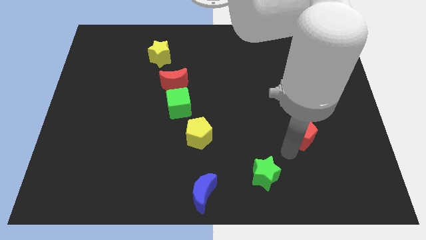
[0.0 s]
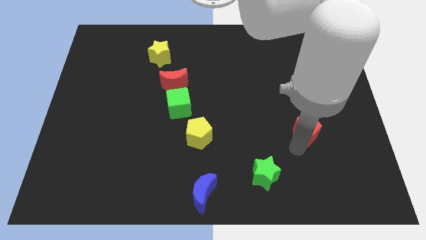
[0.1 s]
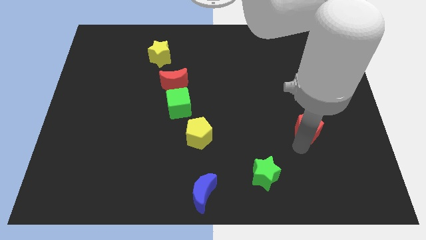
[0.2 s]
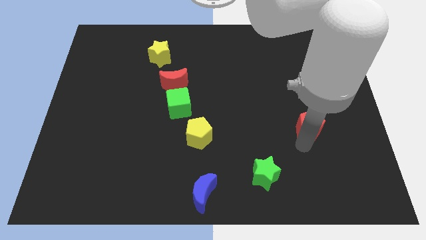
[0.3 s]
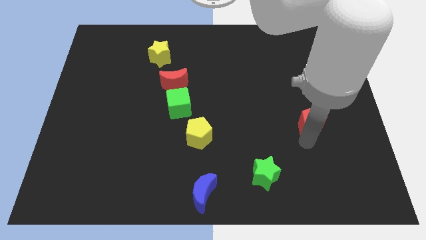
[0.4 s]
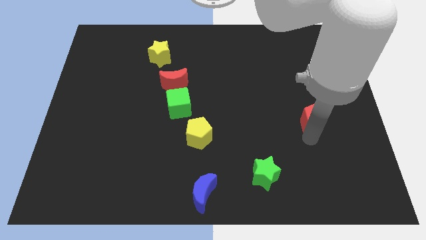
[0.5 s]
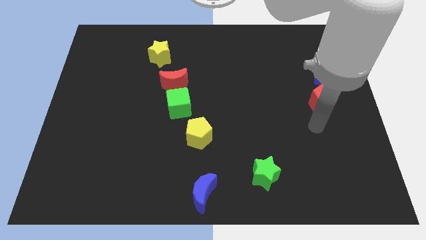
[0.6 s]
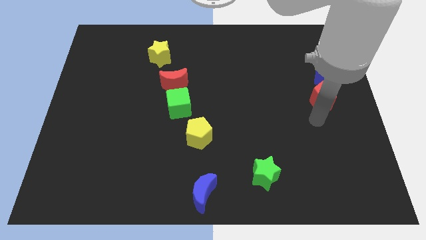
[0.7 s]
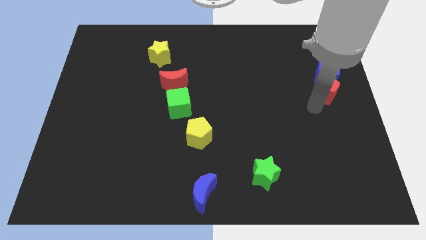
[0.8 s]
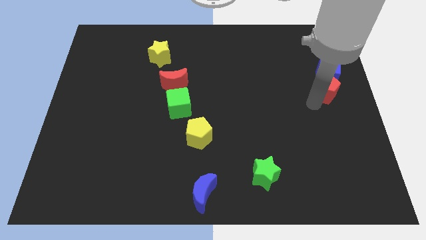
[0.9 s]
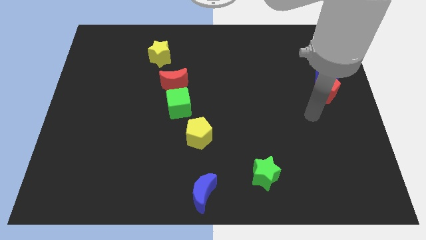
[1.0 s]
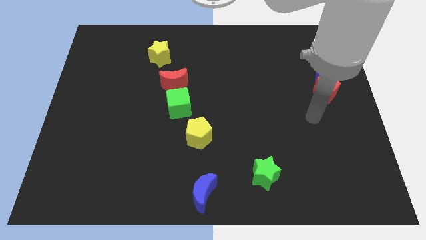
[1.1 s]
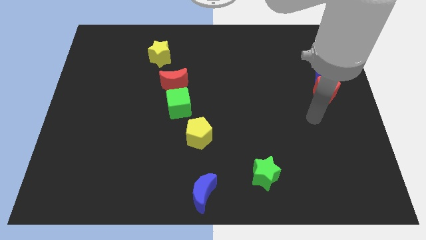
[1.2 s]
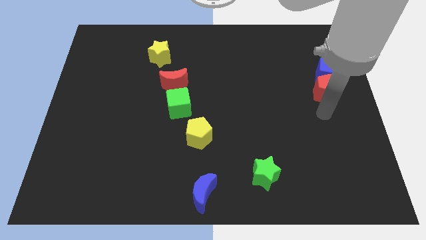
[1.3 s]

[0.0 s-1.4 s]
move the red pentagon into the bottom side of the blue cube

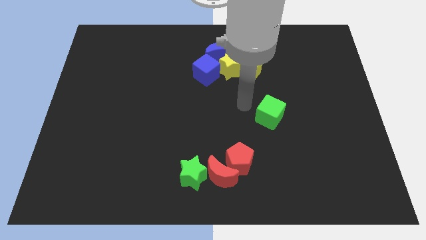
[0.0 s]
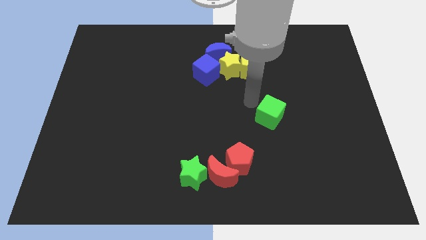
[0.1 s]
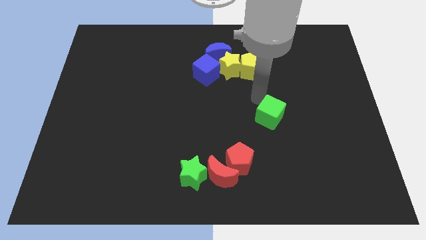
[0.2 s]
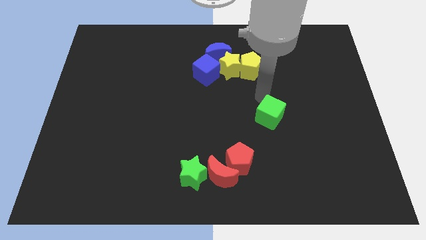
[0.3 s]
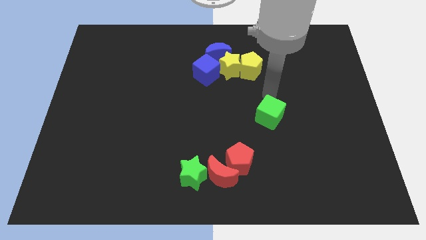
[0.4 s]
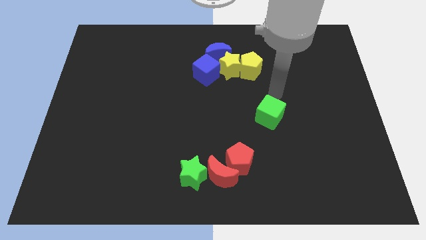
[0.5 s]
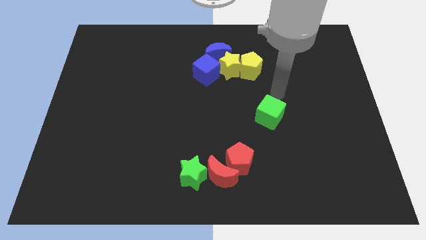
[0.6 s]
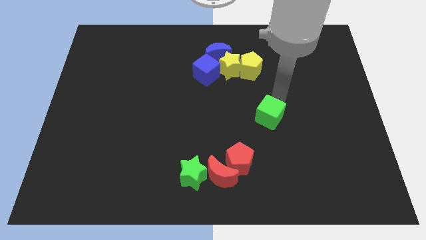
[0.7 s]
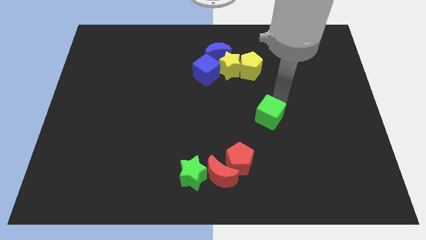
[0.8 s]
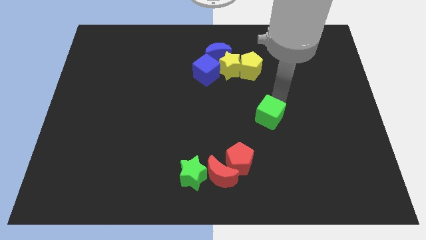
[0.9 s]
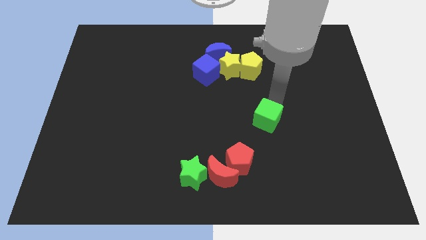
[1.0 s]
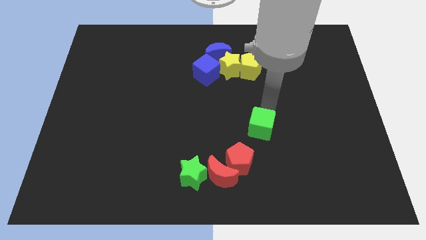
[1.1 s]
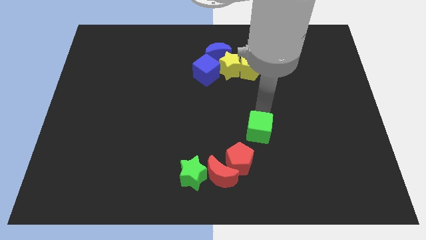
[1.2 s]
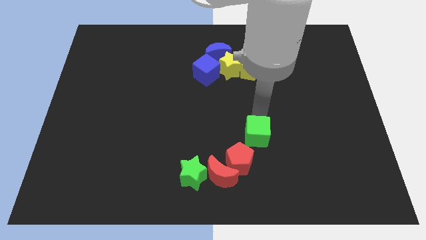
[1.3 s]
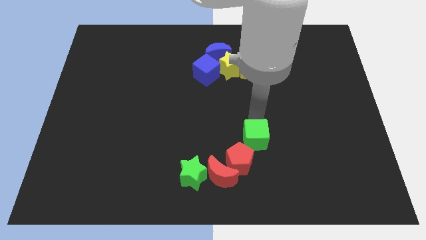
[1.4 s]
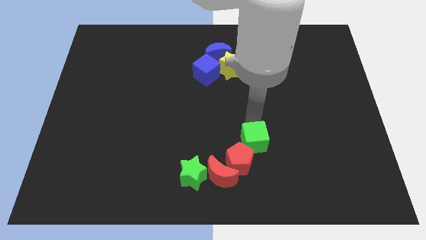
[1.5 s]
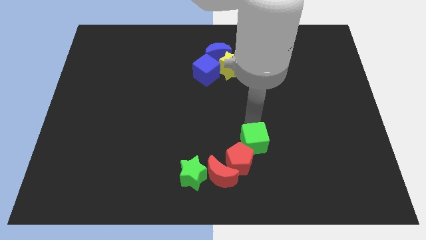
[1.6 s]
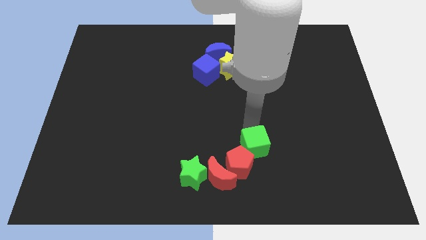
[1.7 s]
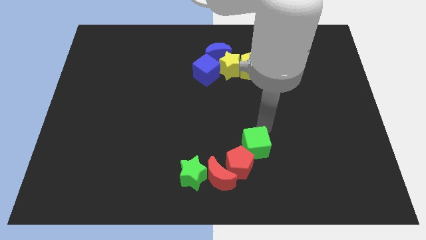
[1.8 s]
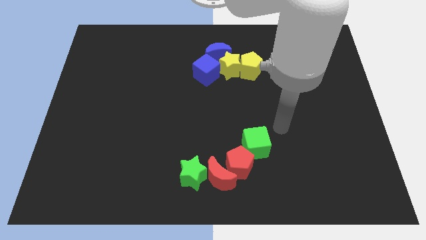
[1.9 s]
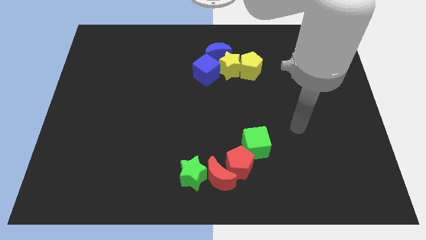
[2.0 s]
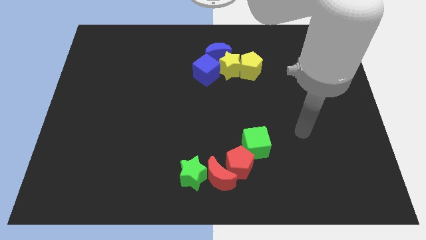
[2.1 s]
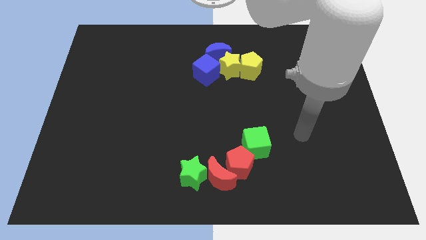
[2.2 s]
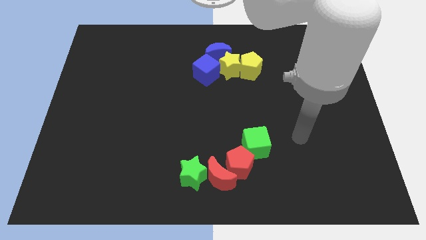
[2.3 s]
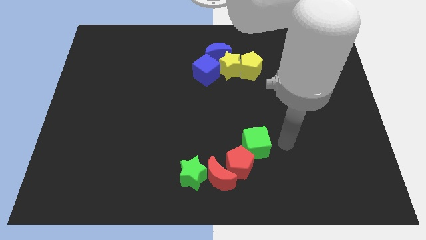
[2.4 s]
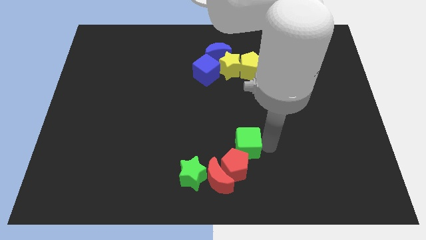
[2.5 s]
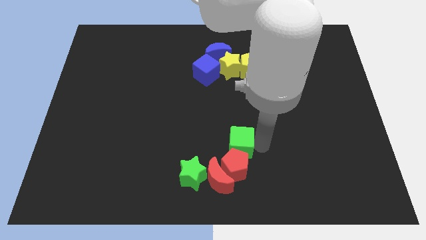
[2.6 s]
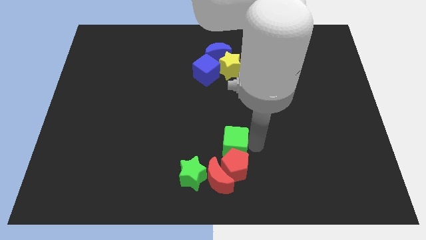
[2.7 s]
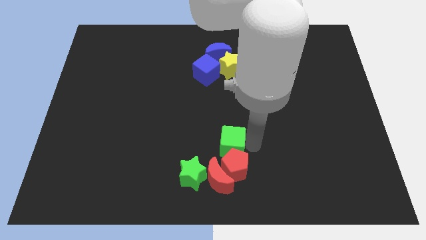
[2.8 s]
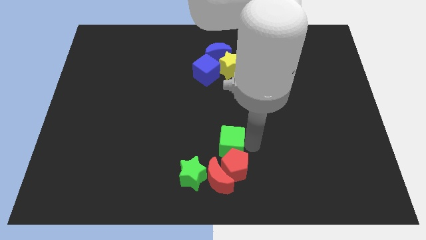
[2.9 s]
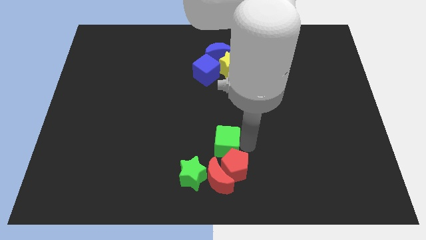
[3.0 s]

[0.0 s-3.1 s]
move the green cube above the red pentagon

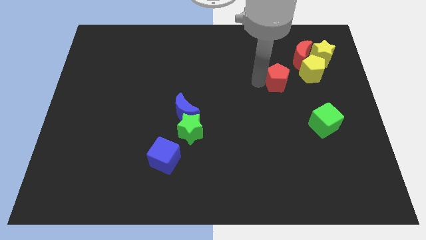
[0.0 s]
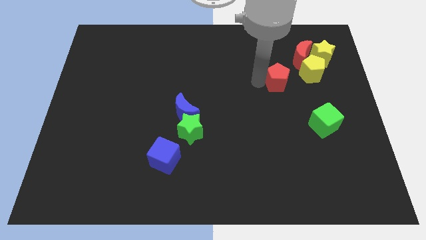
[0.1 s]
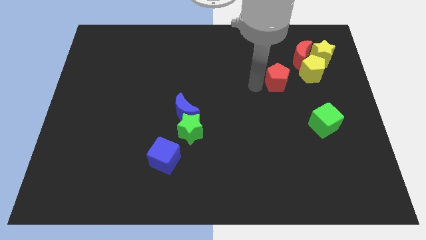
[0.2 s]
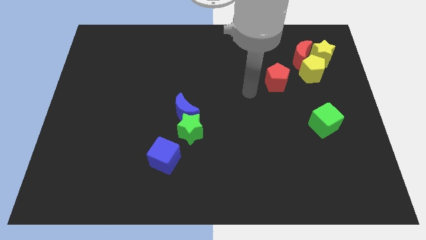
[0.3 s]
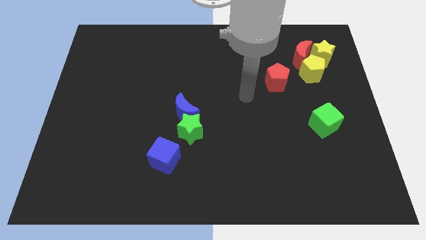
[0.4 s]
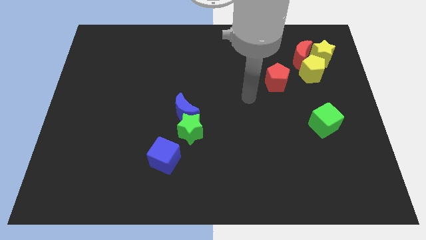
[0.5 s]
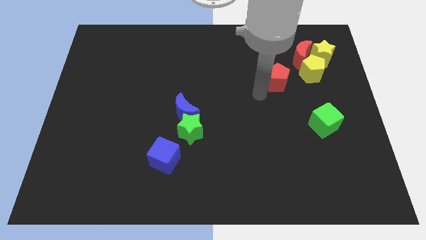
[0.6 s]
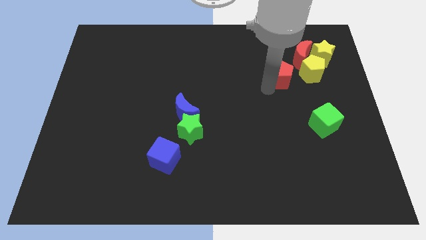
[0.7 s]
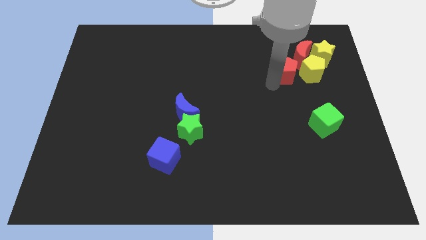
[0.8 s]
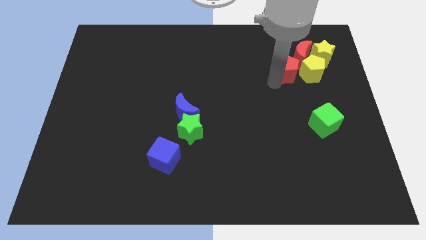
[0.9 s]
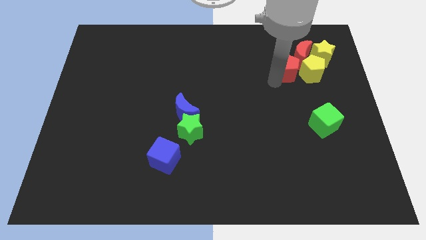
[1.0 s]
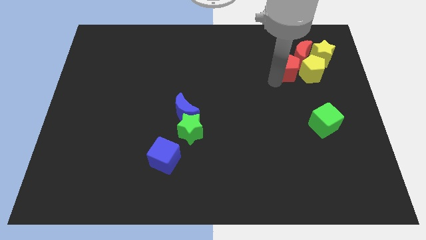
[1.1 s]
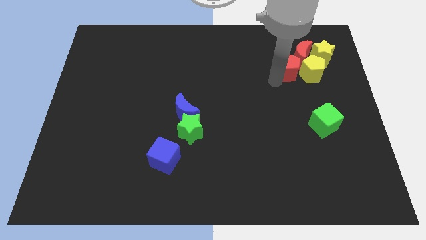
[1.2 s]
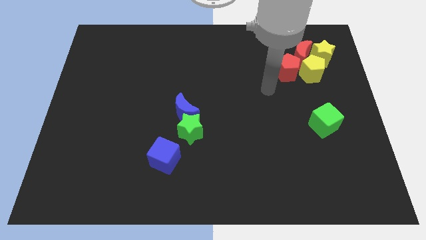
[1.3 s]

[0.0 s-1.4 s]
move the red pentagon to the left of the yellow pentagon

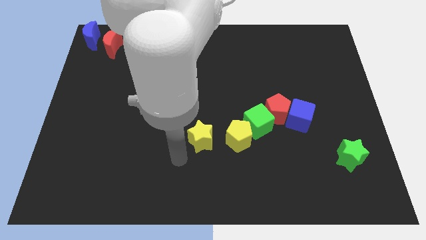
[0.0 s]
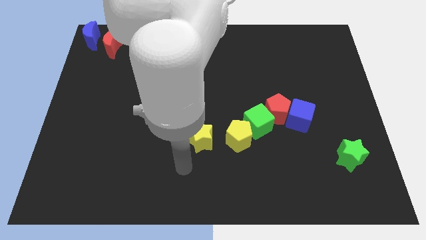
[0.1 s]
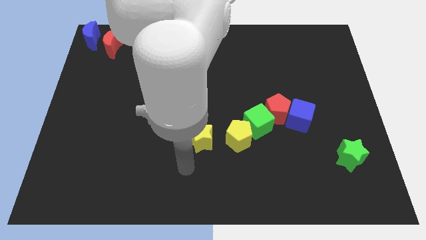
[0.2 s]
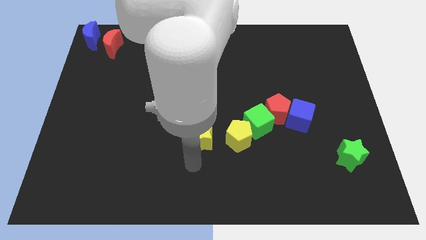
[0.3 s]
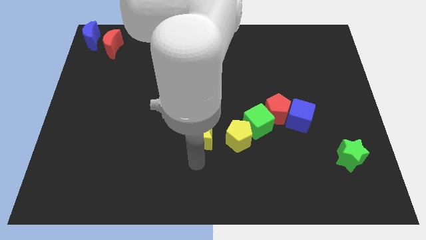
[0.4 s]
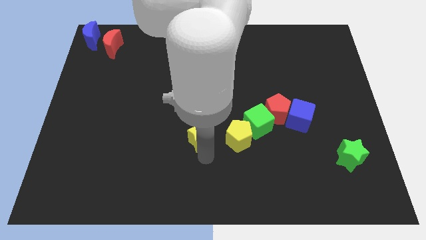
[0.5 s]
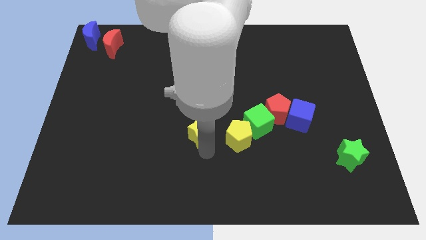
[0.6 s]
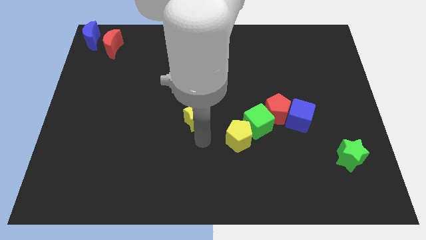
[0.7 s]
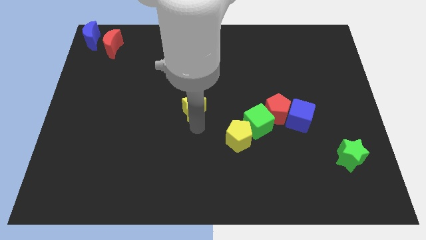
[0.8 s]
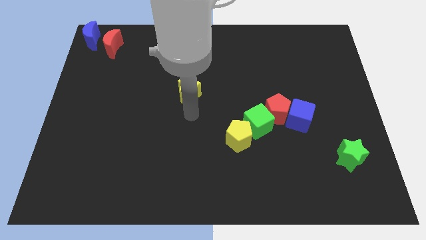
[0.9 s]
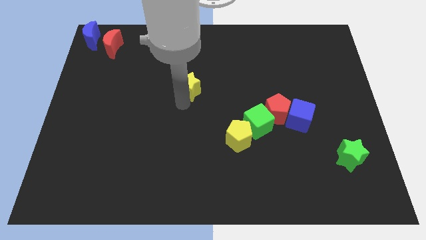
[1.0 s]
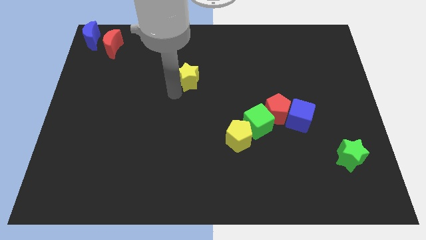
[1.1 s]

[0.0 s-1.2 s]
put the yellow star diagonally at the top left of the yellow pentagon

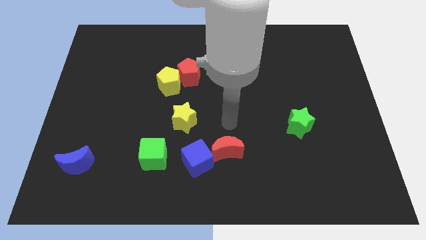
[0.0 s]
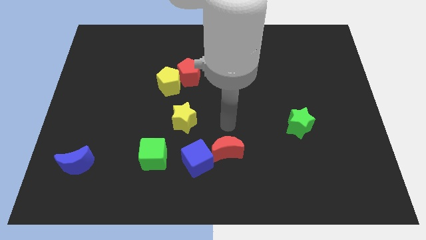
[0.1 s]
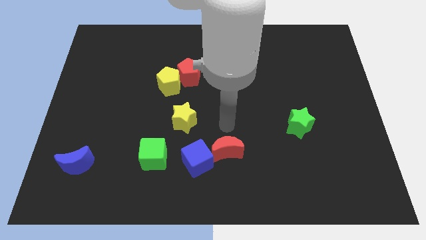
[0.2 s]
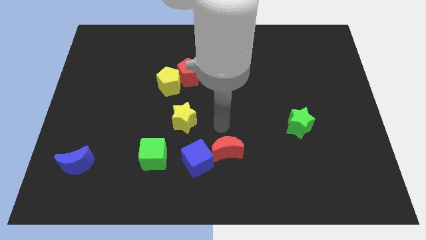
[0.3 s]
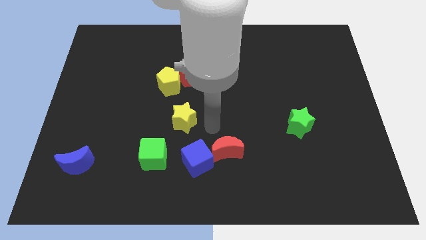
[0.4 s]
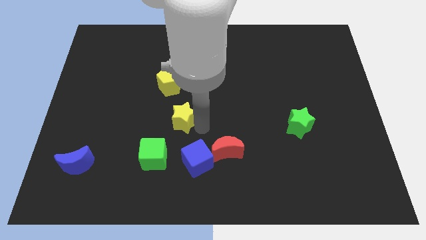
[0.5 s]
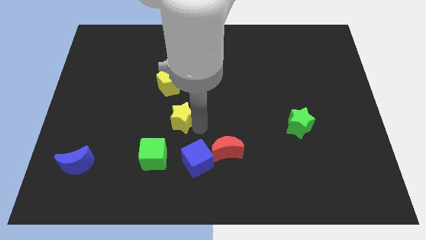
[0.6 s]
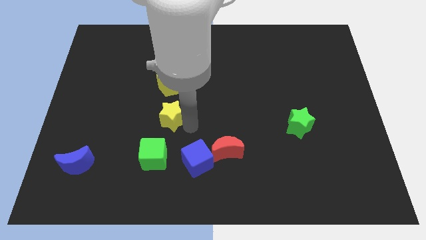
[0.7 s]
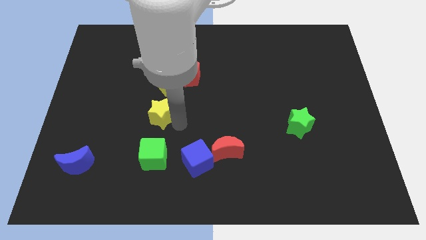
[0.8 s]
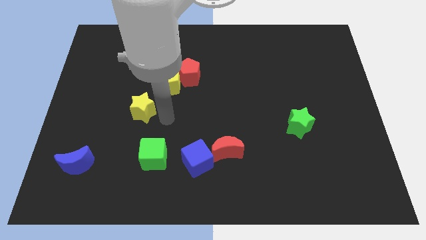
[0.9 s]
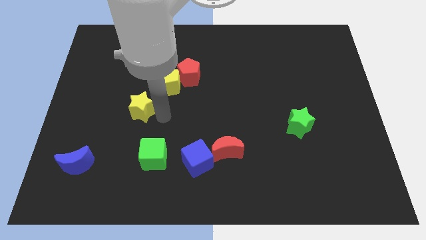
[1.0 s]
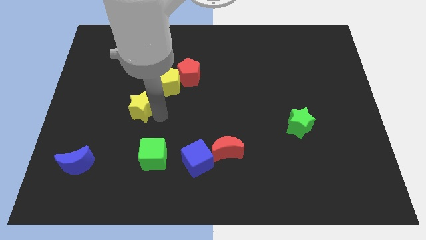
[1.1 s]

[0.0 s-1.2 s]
move the yellow star vertical to the yellow pentagon

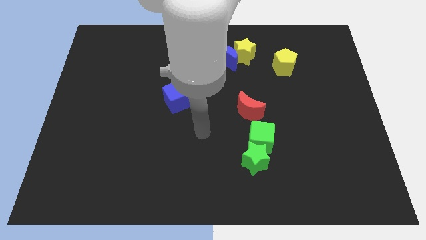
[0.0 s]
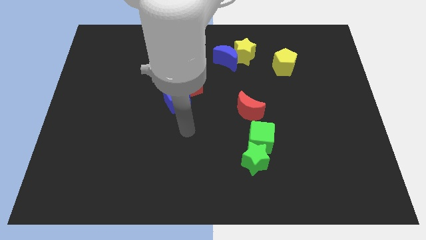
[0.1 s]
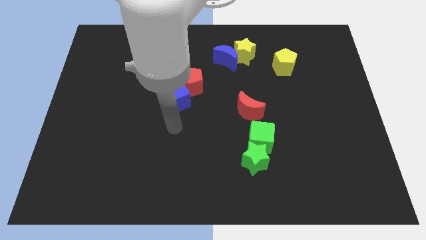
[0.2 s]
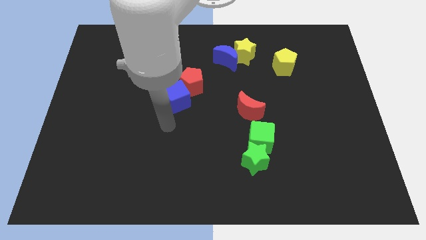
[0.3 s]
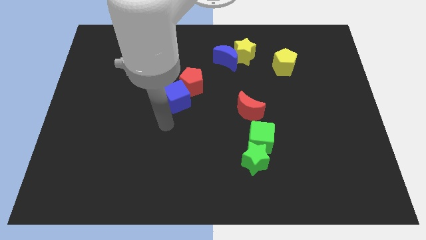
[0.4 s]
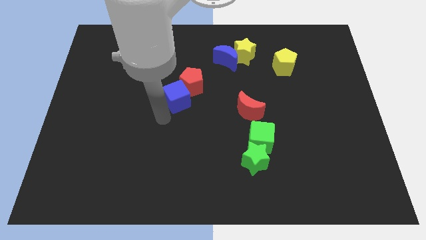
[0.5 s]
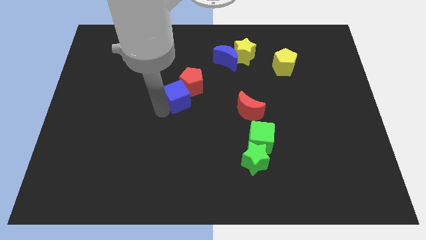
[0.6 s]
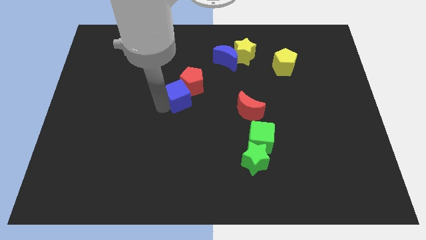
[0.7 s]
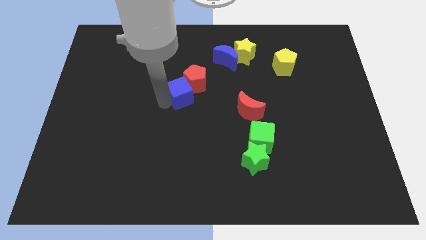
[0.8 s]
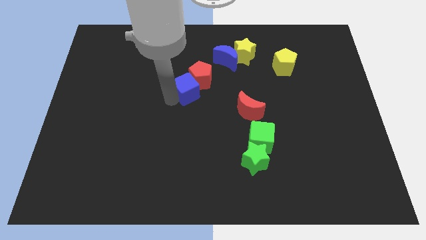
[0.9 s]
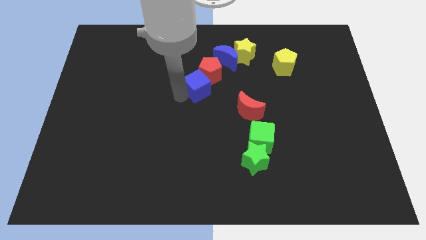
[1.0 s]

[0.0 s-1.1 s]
tap on the left side of blue cube
